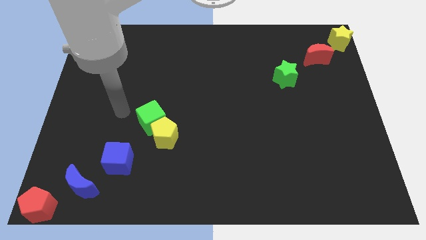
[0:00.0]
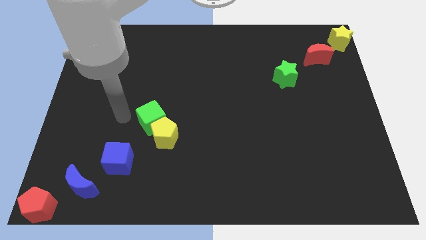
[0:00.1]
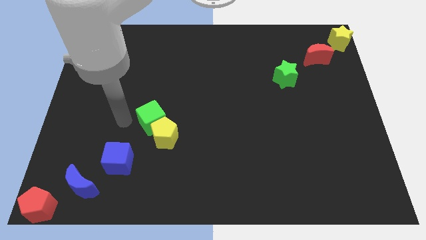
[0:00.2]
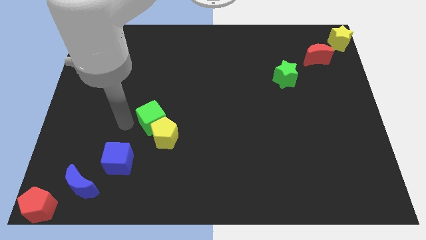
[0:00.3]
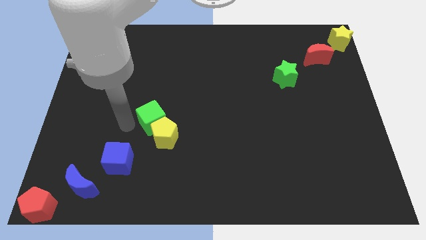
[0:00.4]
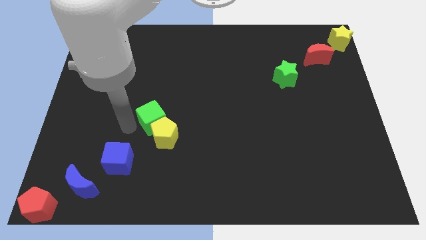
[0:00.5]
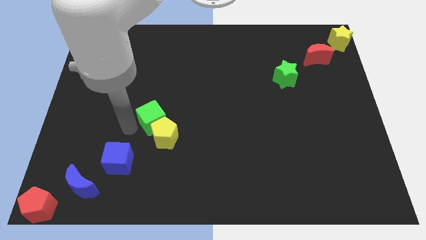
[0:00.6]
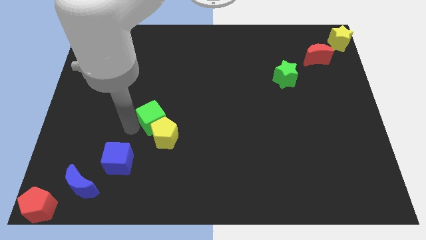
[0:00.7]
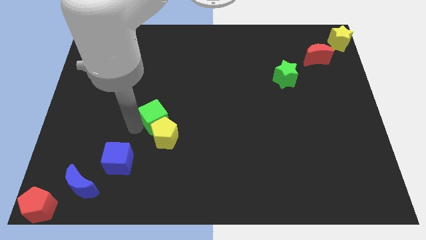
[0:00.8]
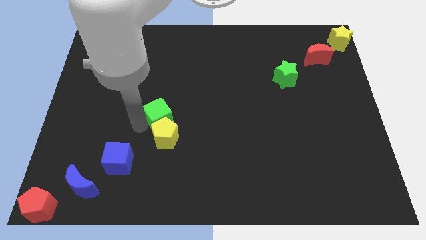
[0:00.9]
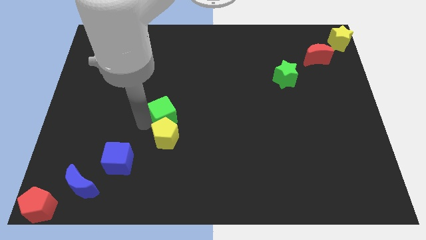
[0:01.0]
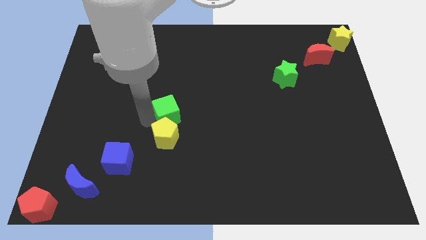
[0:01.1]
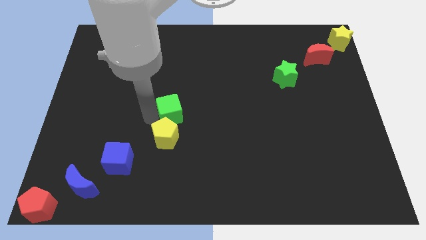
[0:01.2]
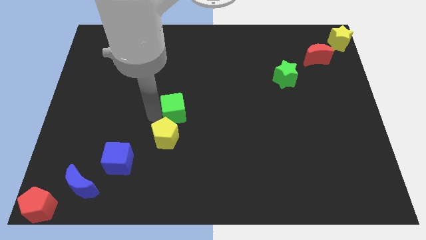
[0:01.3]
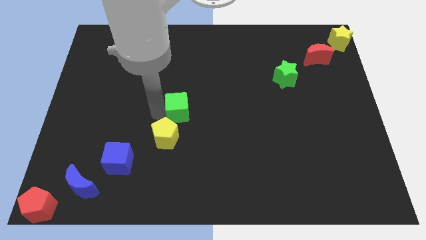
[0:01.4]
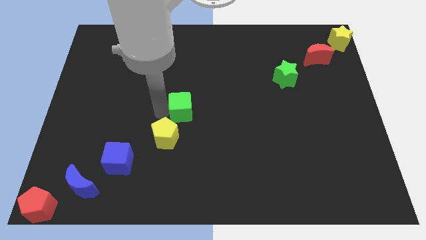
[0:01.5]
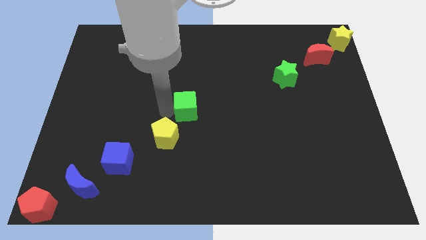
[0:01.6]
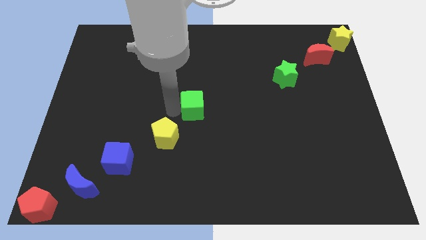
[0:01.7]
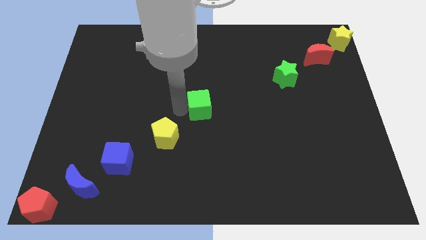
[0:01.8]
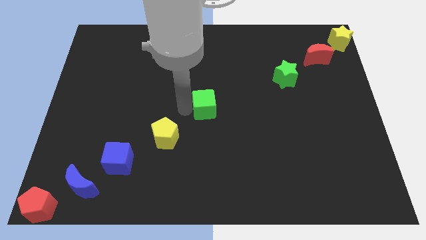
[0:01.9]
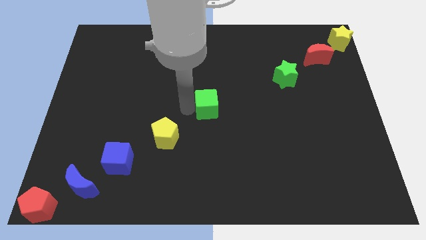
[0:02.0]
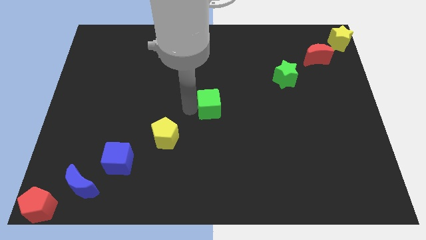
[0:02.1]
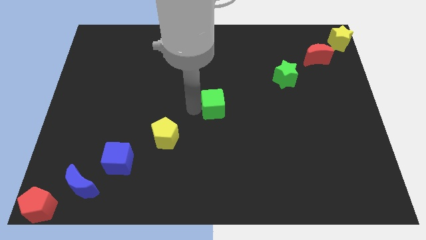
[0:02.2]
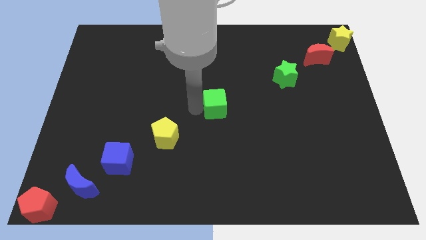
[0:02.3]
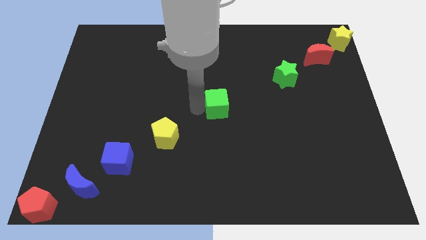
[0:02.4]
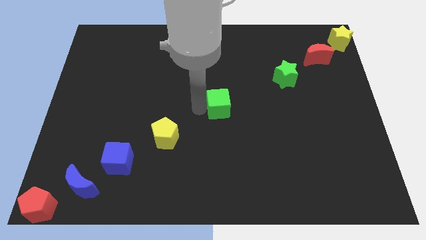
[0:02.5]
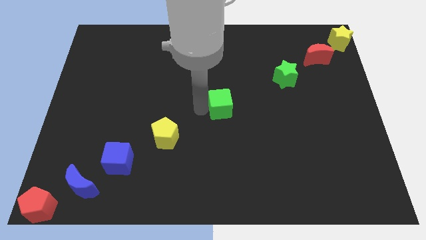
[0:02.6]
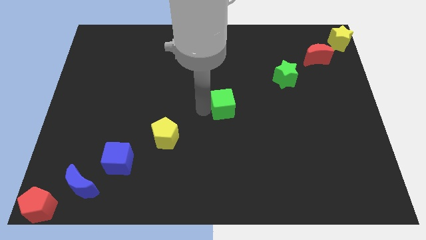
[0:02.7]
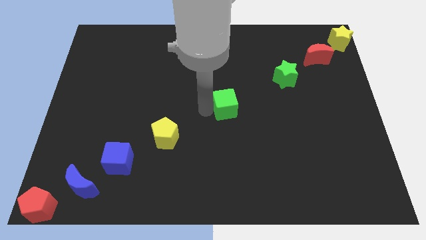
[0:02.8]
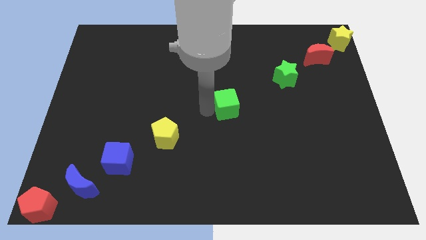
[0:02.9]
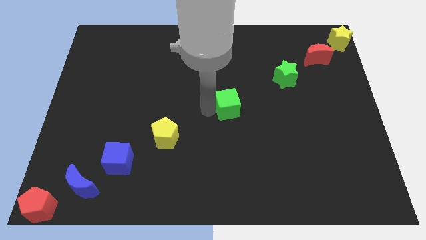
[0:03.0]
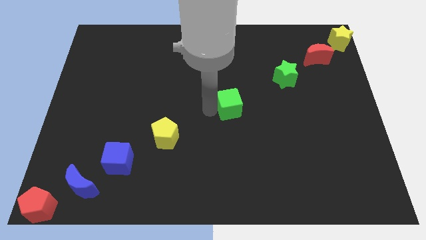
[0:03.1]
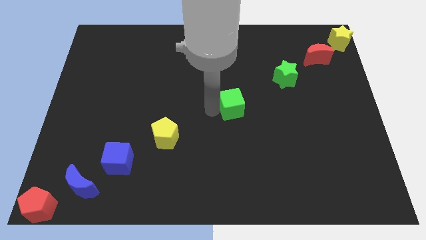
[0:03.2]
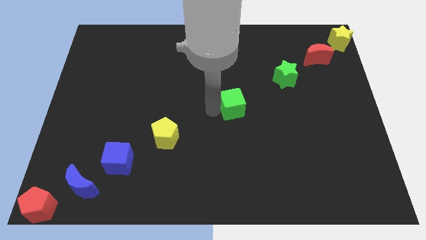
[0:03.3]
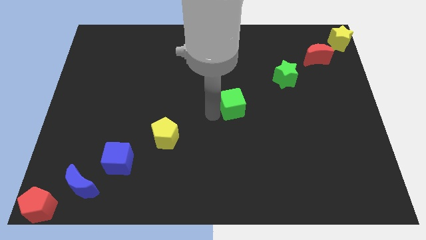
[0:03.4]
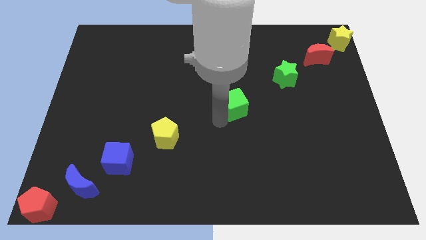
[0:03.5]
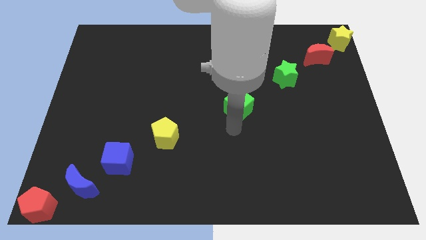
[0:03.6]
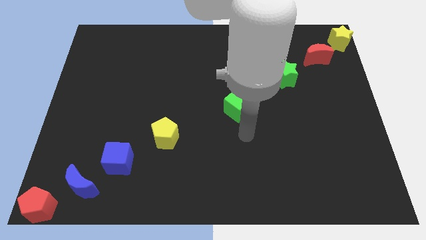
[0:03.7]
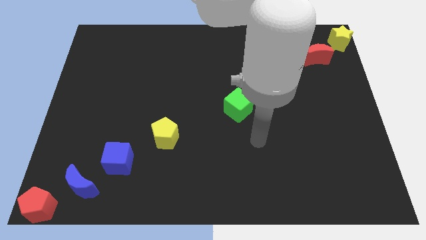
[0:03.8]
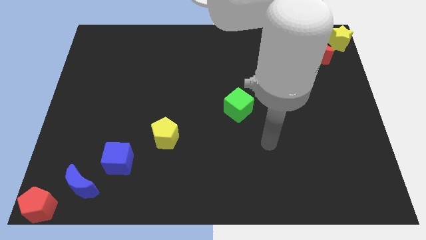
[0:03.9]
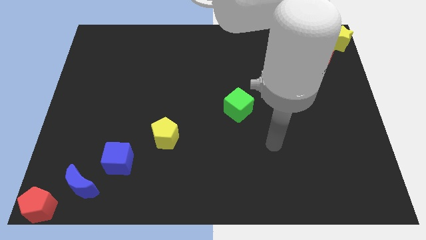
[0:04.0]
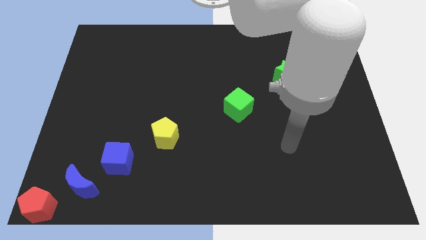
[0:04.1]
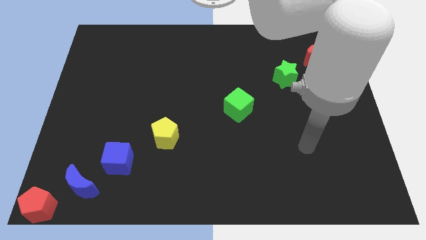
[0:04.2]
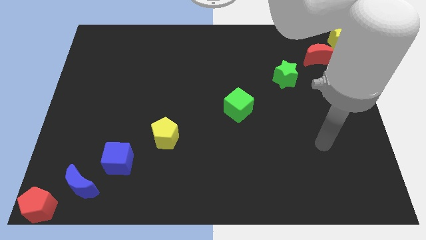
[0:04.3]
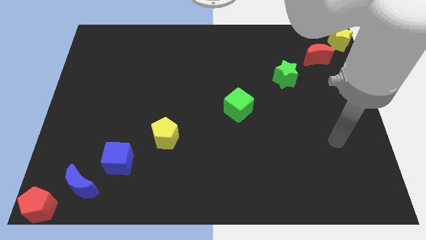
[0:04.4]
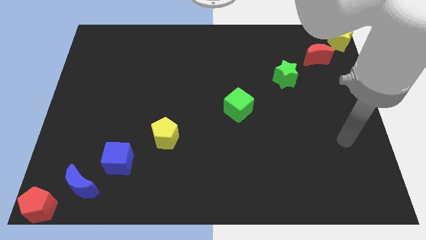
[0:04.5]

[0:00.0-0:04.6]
move green cube diagonally above the yellow pentagon

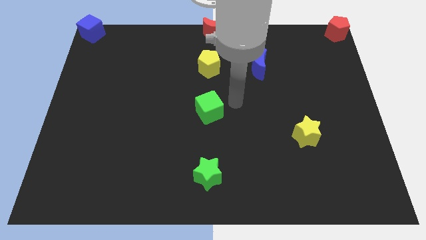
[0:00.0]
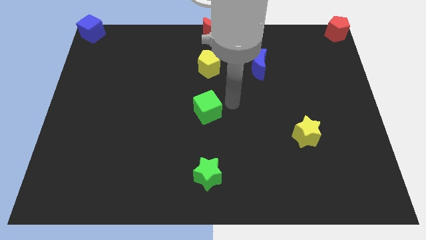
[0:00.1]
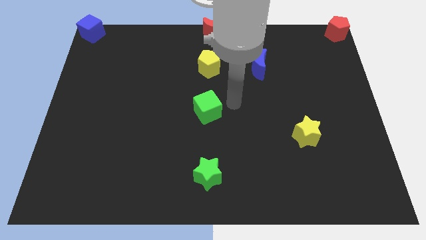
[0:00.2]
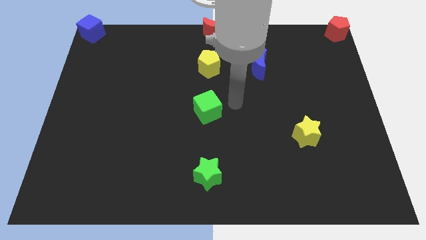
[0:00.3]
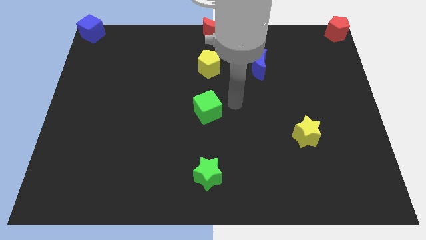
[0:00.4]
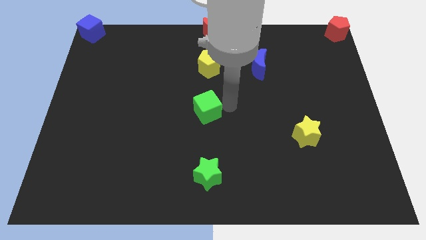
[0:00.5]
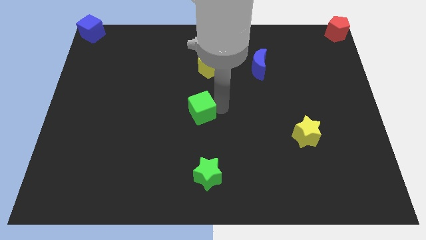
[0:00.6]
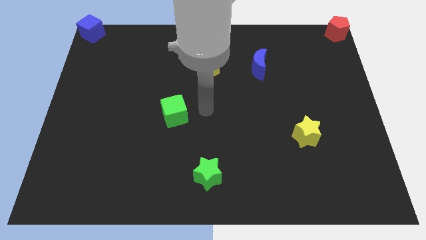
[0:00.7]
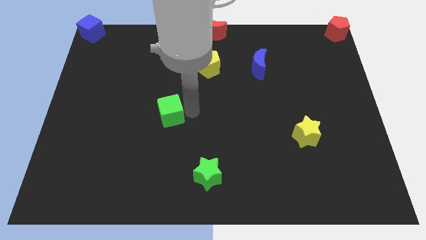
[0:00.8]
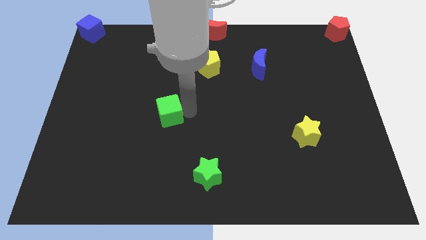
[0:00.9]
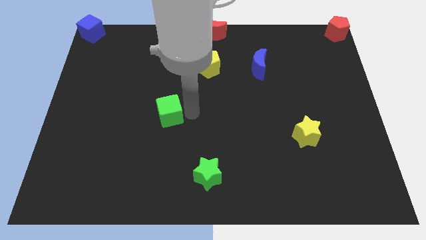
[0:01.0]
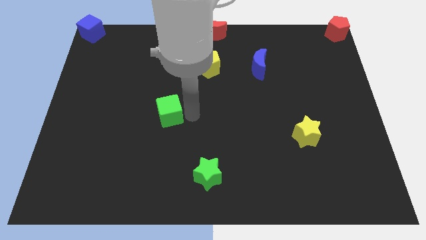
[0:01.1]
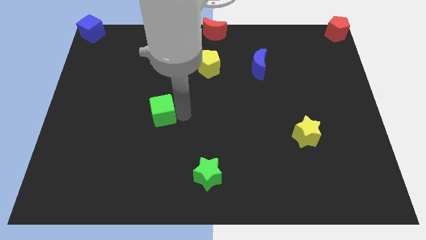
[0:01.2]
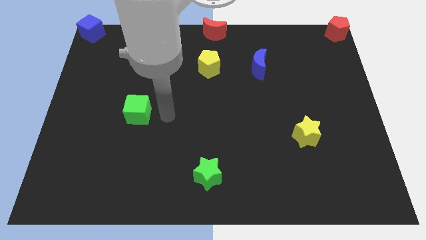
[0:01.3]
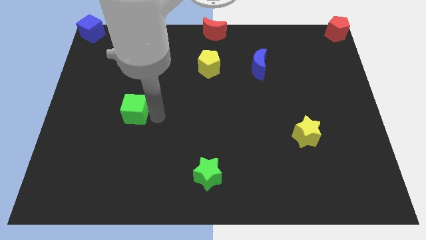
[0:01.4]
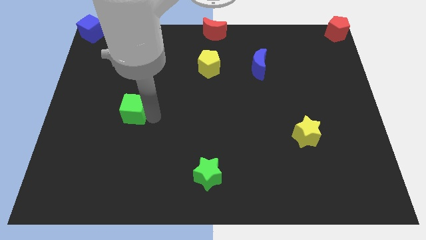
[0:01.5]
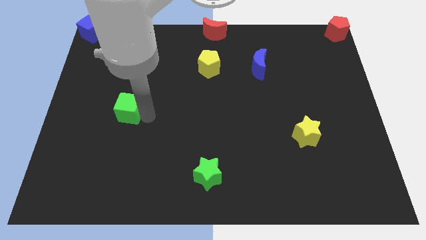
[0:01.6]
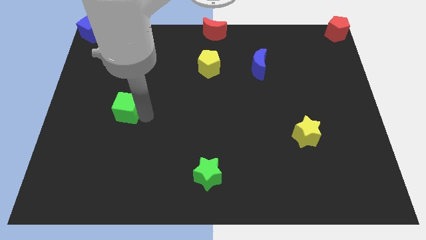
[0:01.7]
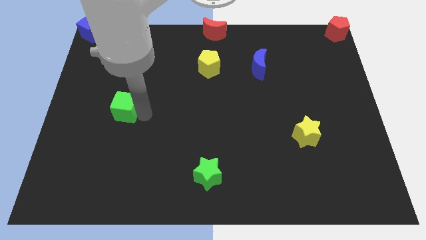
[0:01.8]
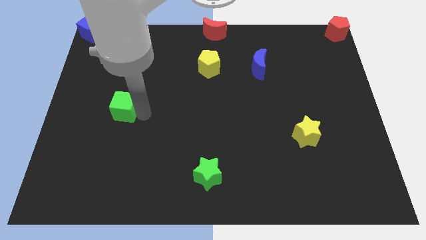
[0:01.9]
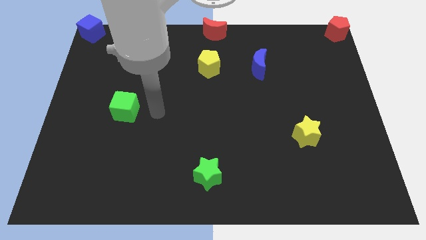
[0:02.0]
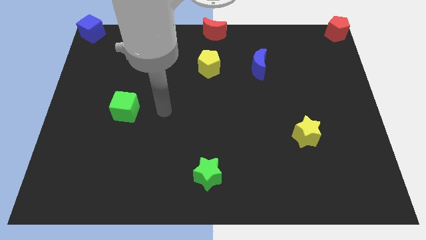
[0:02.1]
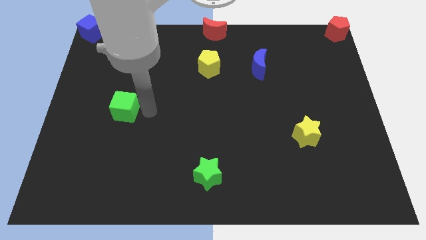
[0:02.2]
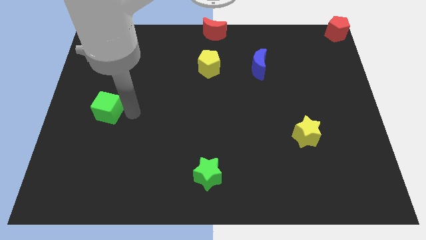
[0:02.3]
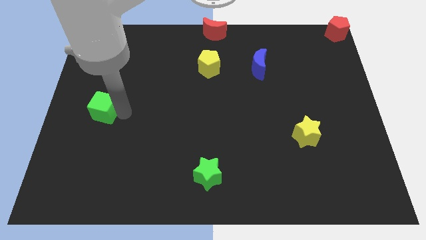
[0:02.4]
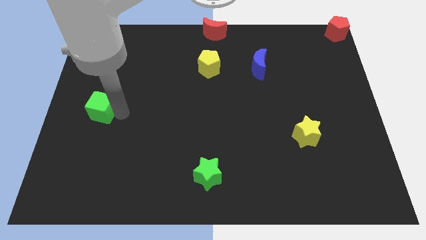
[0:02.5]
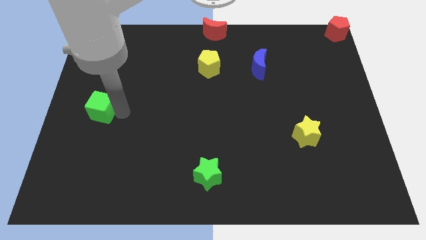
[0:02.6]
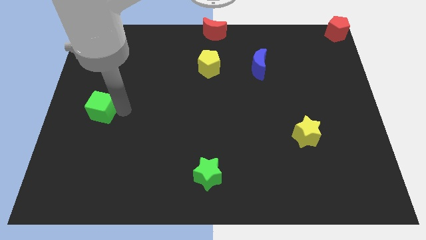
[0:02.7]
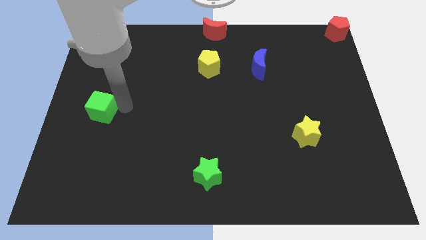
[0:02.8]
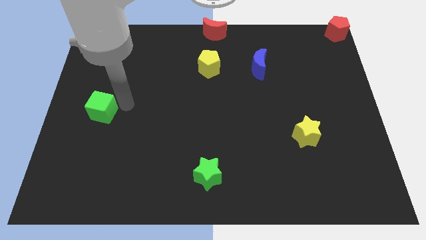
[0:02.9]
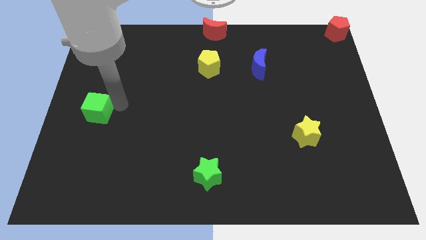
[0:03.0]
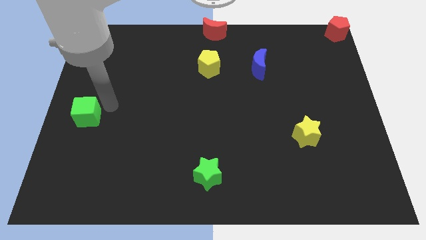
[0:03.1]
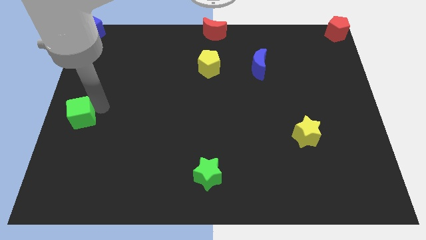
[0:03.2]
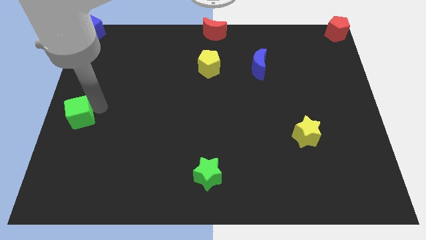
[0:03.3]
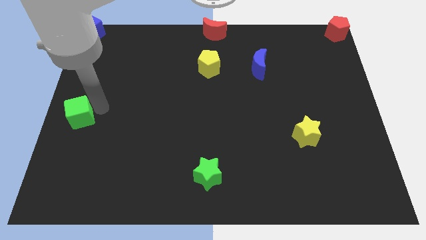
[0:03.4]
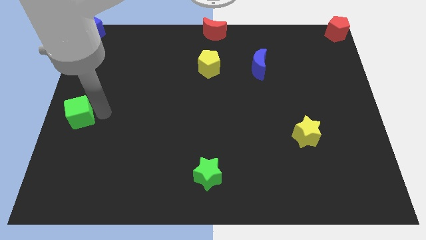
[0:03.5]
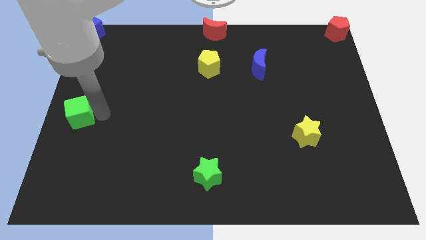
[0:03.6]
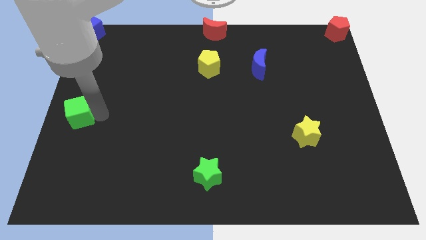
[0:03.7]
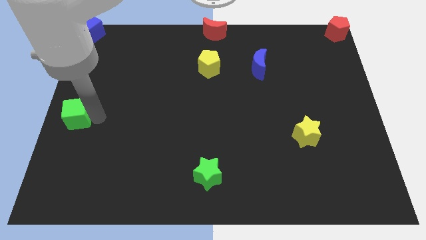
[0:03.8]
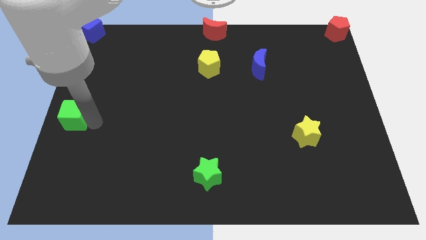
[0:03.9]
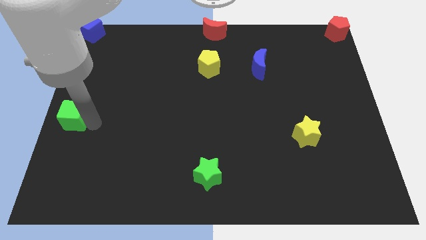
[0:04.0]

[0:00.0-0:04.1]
move the green cube at the bottom of the blue cube

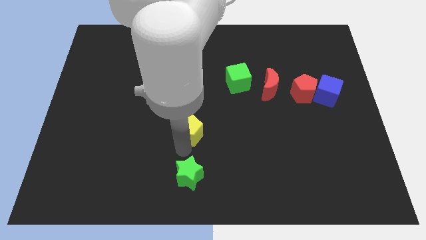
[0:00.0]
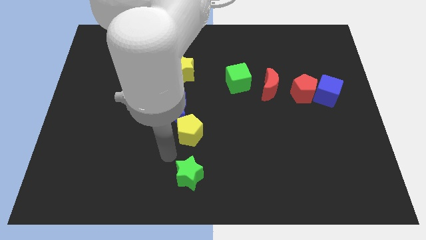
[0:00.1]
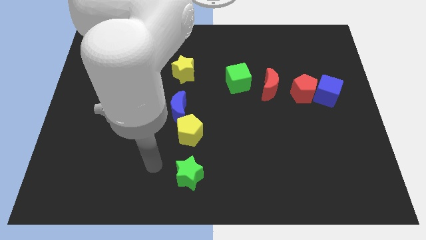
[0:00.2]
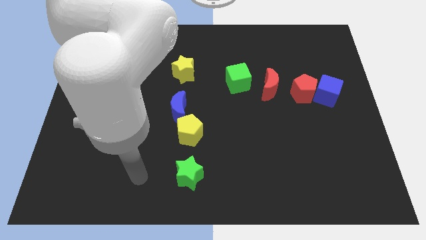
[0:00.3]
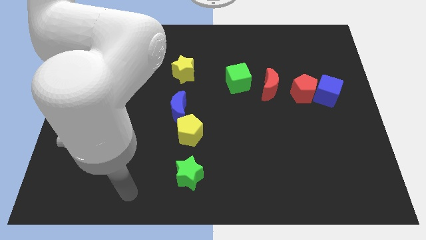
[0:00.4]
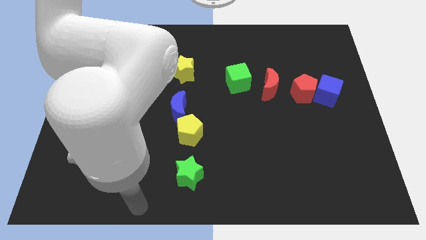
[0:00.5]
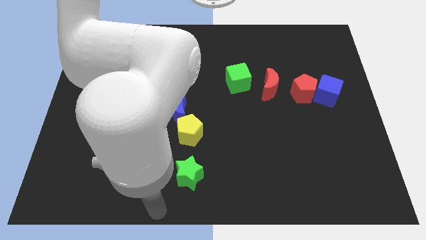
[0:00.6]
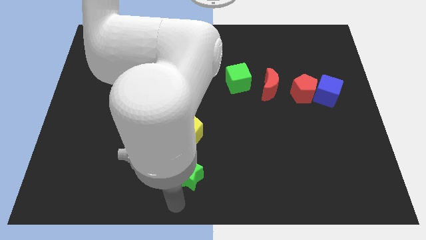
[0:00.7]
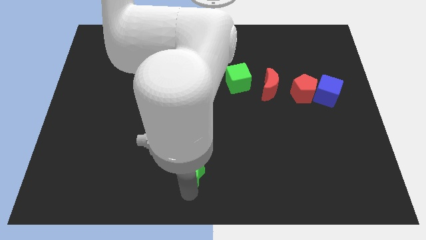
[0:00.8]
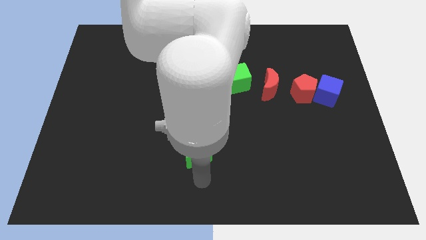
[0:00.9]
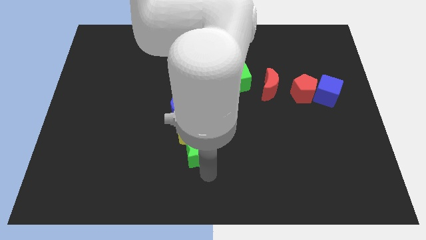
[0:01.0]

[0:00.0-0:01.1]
move the green star towards the yellow pentagon
